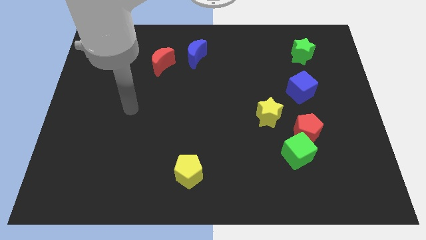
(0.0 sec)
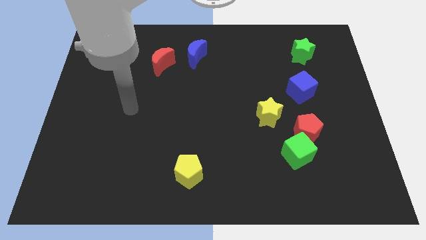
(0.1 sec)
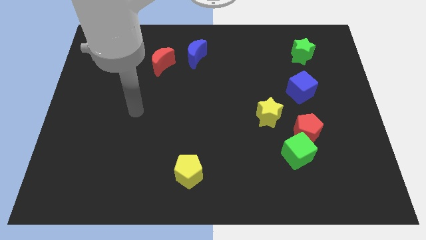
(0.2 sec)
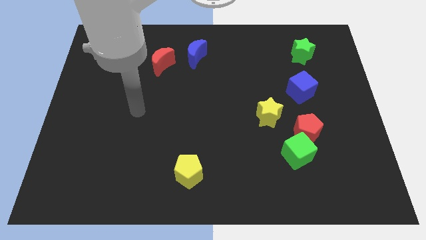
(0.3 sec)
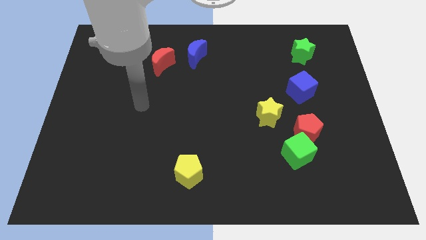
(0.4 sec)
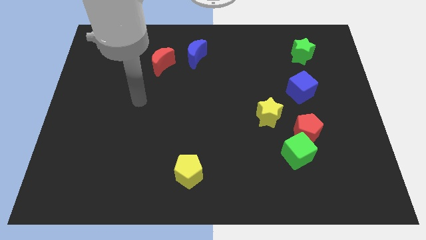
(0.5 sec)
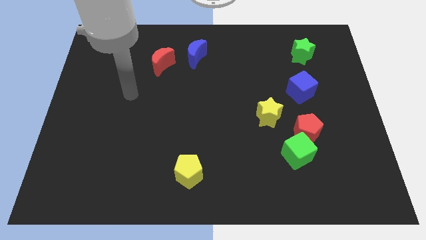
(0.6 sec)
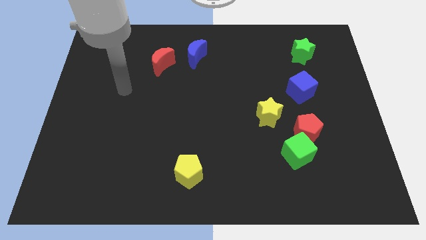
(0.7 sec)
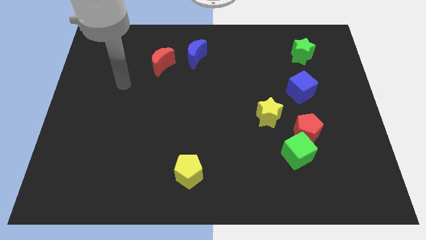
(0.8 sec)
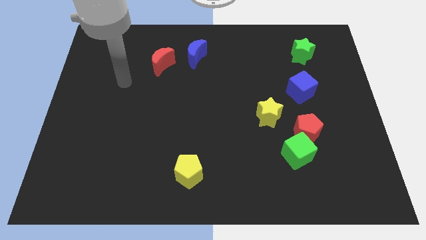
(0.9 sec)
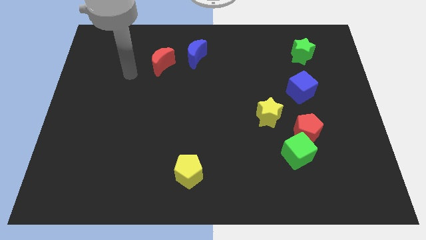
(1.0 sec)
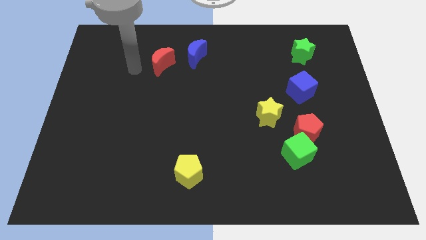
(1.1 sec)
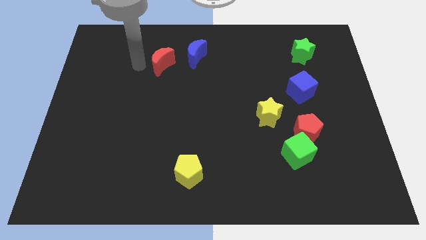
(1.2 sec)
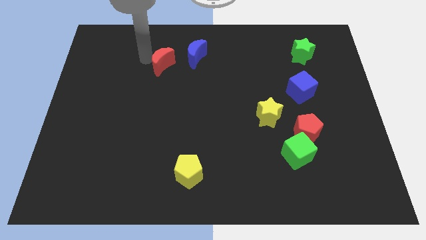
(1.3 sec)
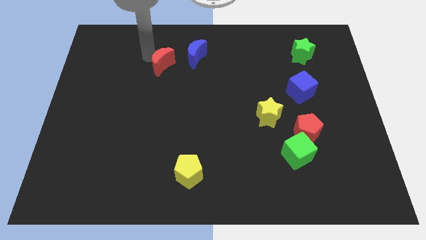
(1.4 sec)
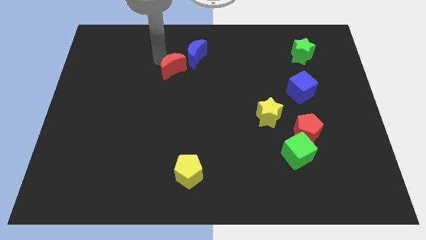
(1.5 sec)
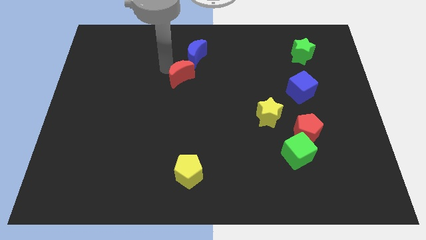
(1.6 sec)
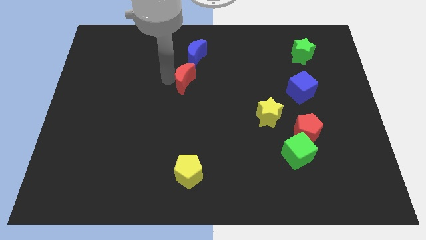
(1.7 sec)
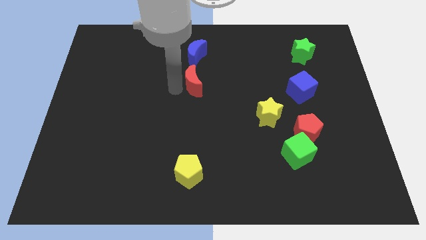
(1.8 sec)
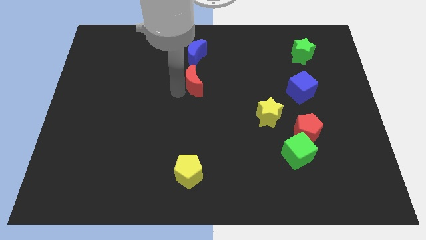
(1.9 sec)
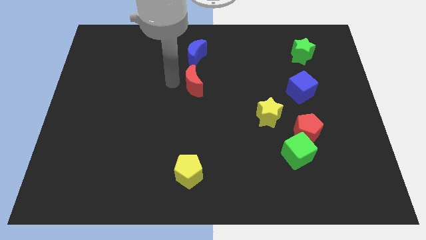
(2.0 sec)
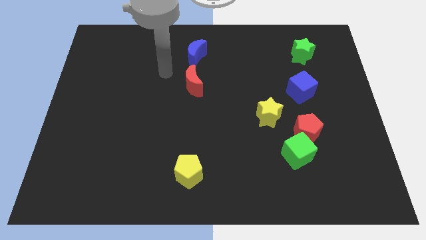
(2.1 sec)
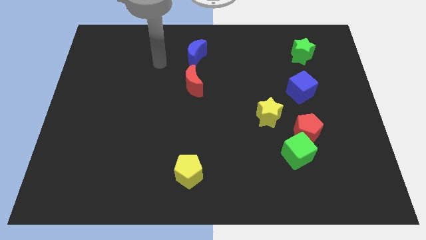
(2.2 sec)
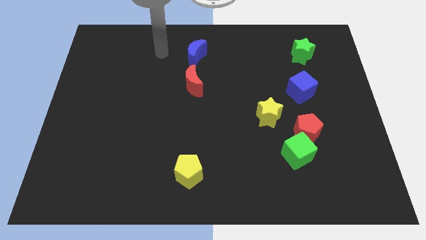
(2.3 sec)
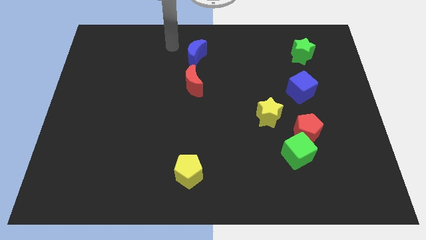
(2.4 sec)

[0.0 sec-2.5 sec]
place red moon below blue moon

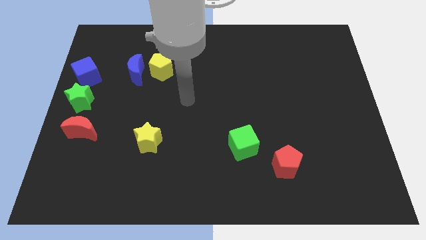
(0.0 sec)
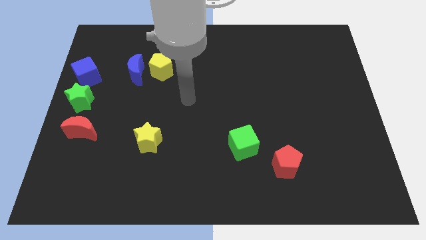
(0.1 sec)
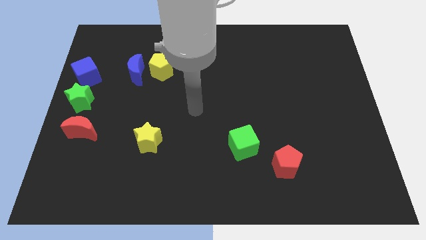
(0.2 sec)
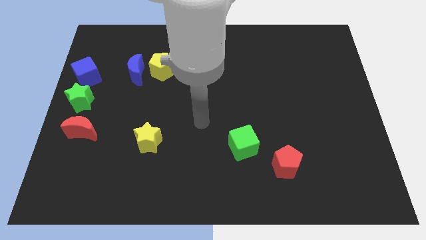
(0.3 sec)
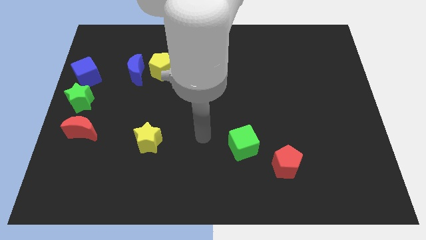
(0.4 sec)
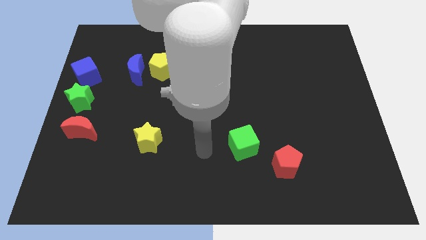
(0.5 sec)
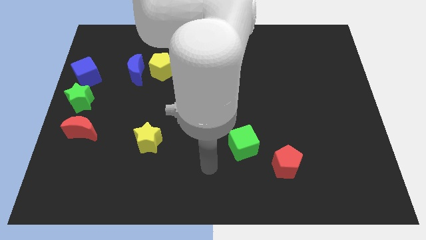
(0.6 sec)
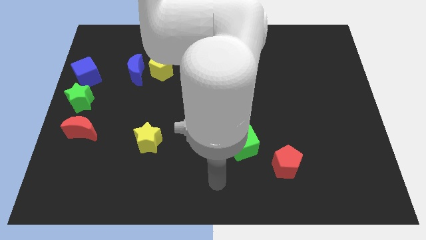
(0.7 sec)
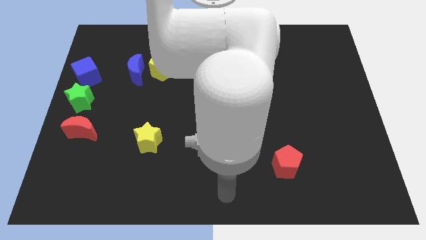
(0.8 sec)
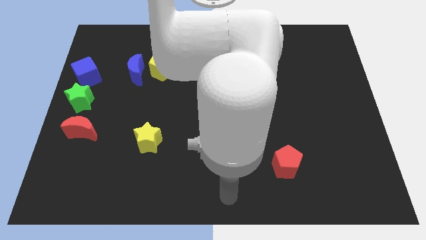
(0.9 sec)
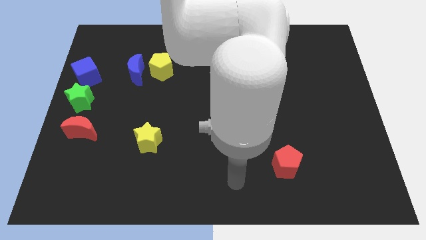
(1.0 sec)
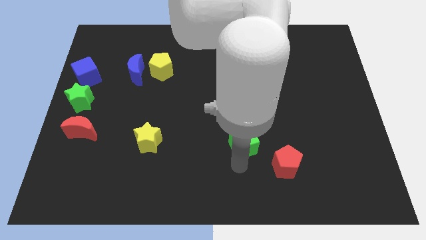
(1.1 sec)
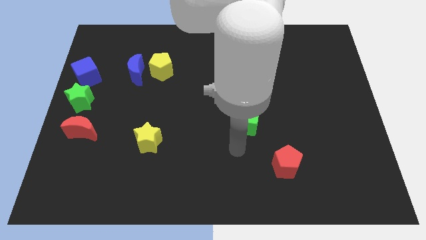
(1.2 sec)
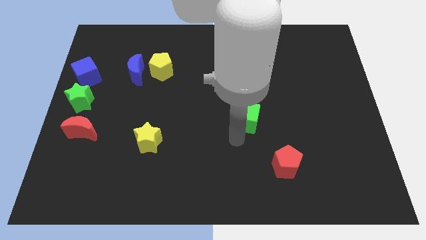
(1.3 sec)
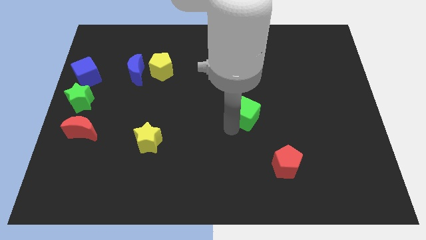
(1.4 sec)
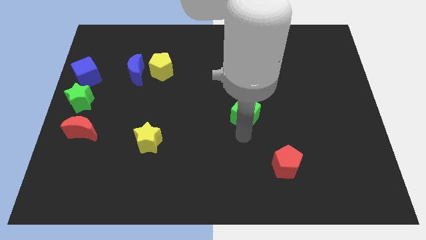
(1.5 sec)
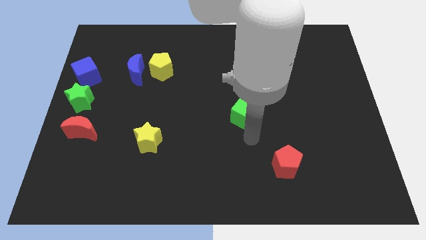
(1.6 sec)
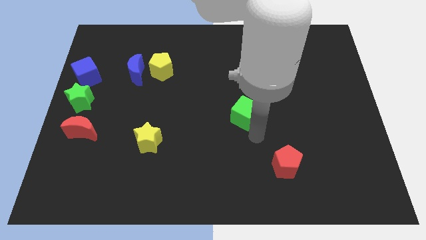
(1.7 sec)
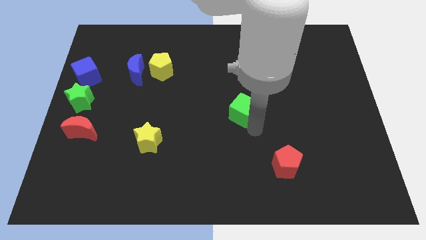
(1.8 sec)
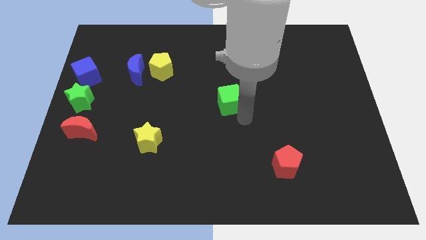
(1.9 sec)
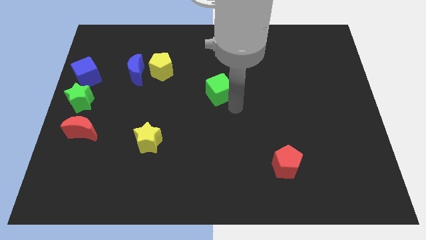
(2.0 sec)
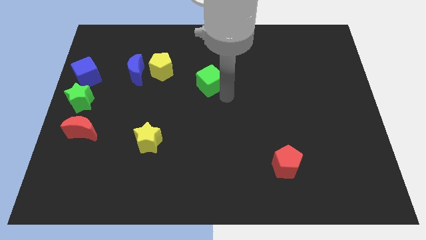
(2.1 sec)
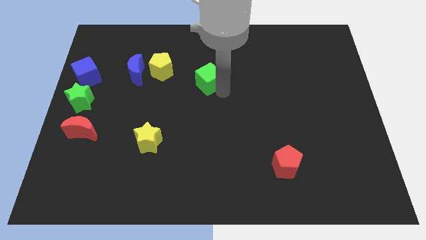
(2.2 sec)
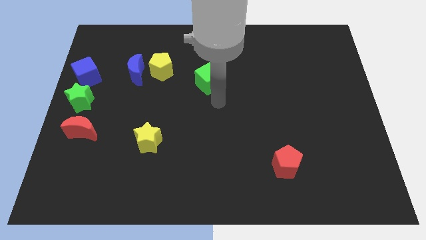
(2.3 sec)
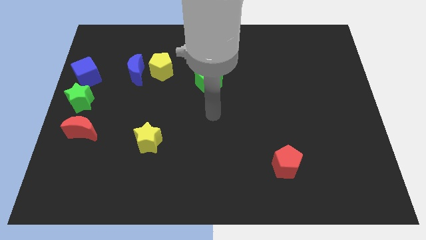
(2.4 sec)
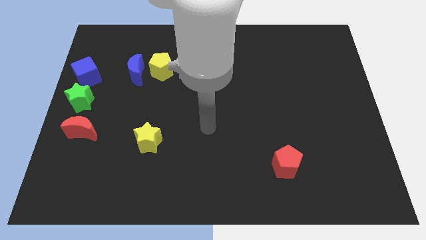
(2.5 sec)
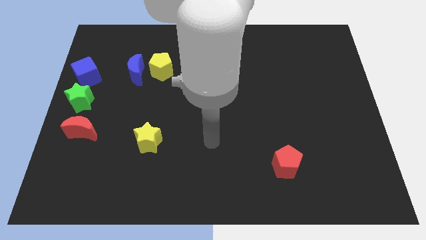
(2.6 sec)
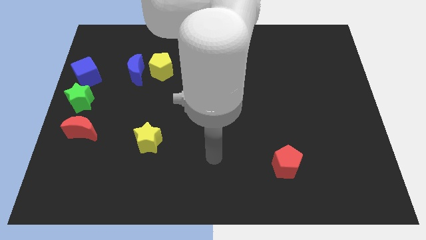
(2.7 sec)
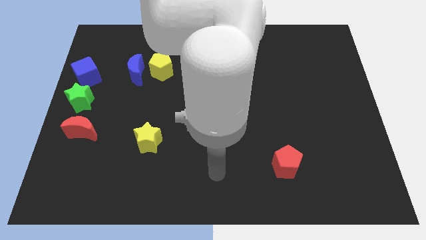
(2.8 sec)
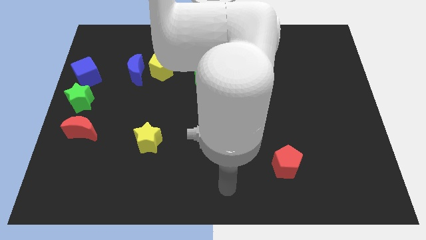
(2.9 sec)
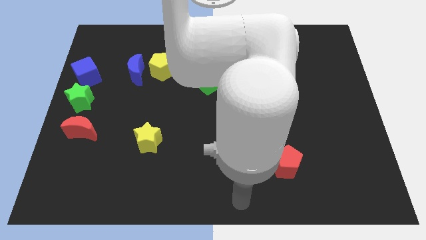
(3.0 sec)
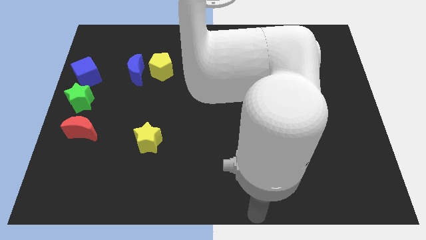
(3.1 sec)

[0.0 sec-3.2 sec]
move the green cube towards top center

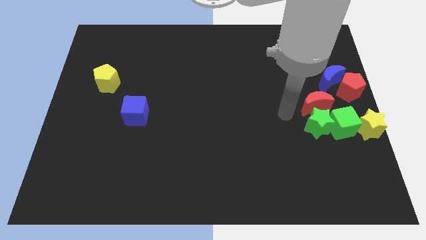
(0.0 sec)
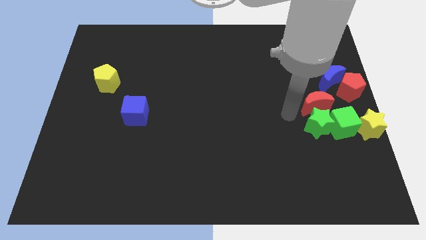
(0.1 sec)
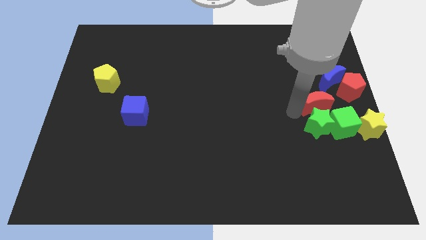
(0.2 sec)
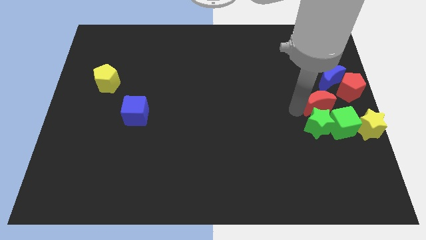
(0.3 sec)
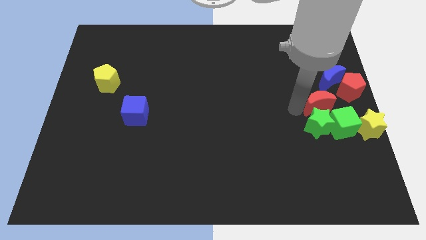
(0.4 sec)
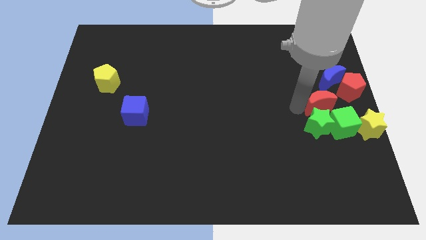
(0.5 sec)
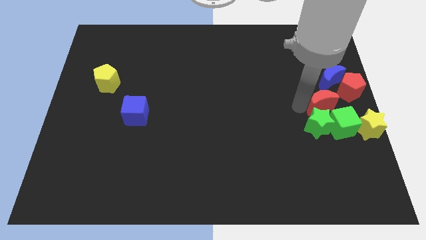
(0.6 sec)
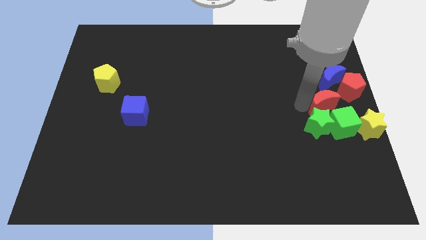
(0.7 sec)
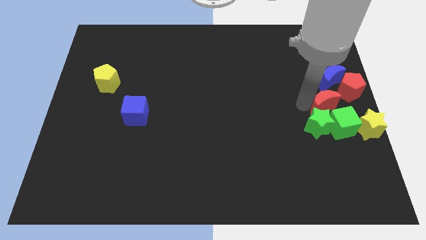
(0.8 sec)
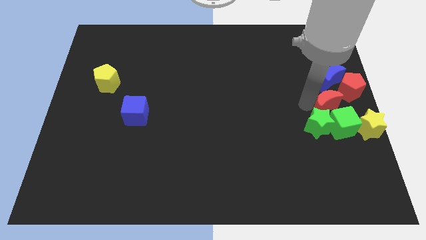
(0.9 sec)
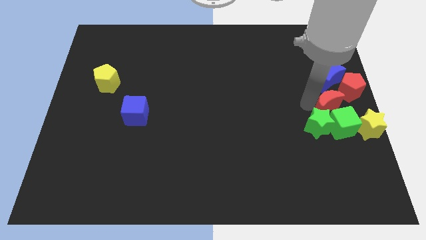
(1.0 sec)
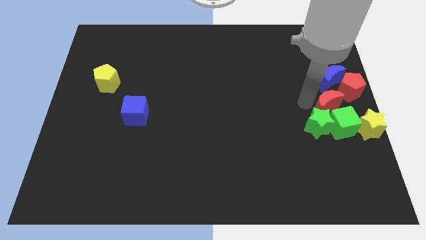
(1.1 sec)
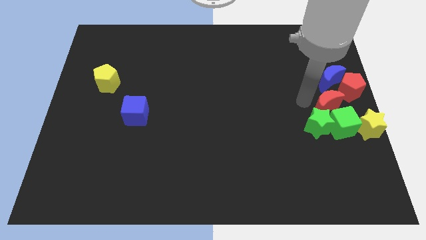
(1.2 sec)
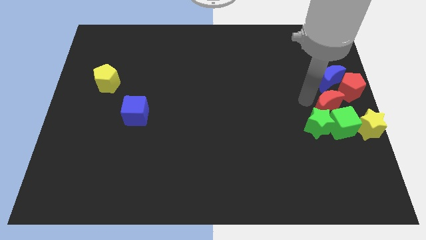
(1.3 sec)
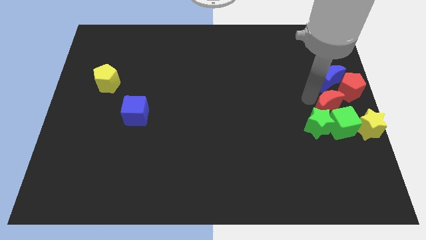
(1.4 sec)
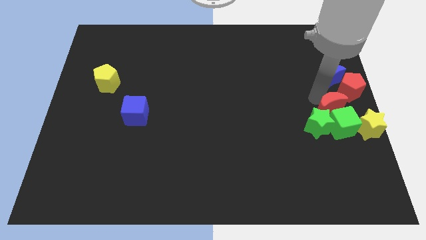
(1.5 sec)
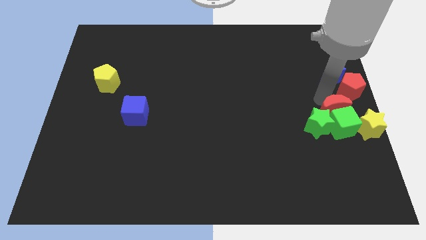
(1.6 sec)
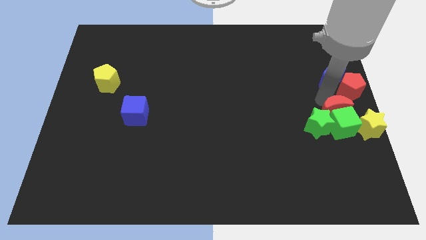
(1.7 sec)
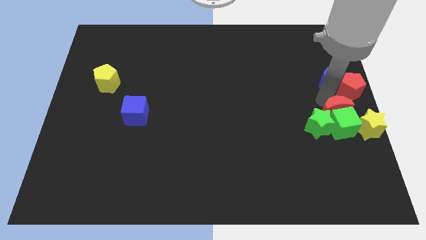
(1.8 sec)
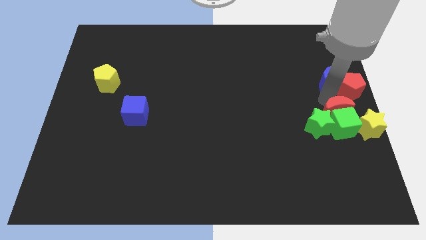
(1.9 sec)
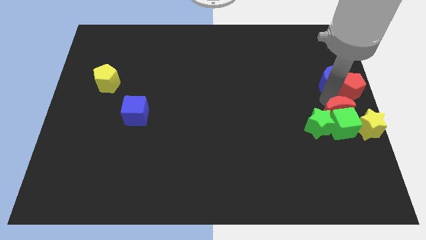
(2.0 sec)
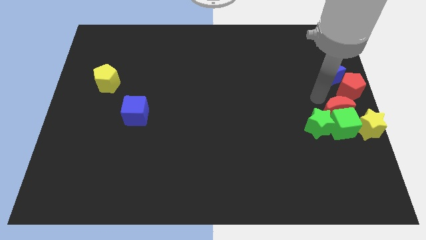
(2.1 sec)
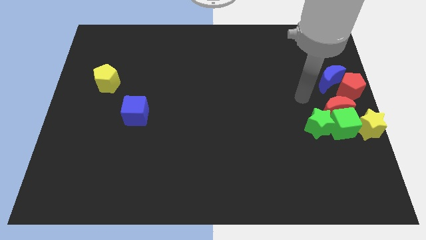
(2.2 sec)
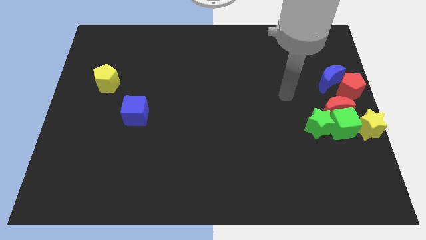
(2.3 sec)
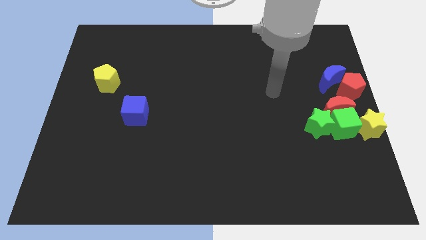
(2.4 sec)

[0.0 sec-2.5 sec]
push the red moon into green cube

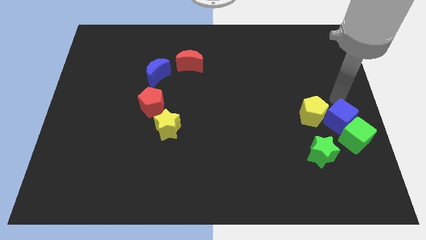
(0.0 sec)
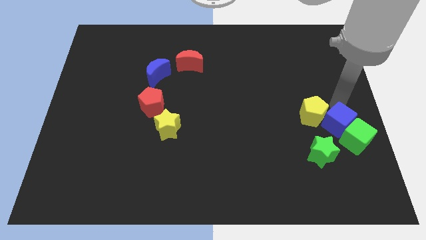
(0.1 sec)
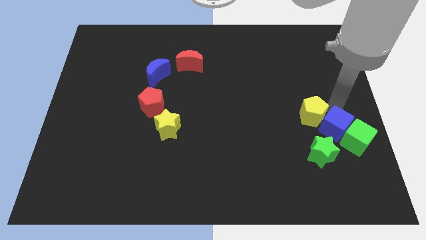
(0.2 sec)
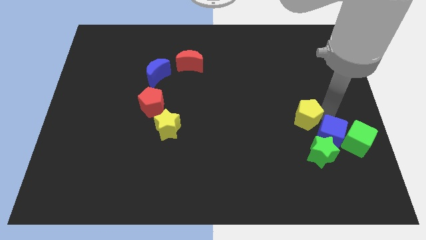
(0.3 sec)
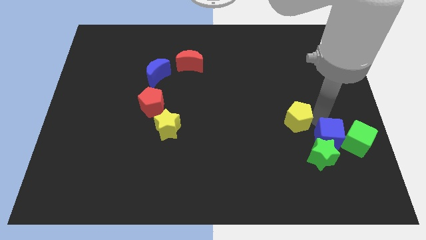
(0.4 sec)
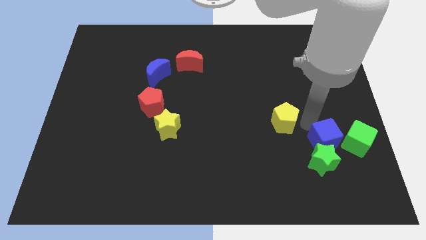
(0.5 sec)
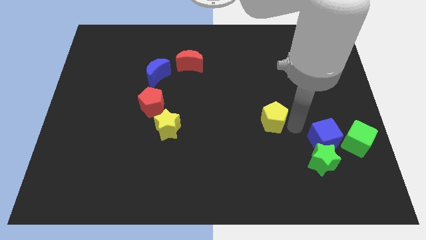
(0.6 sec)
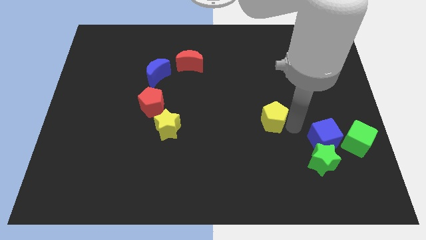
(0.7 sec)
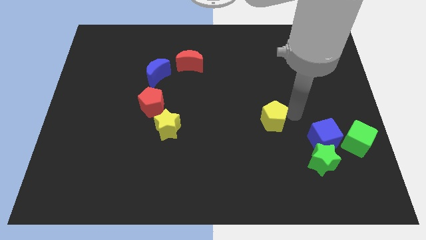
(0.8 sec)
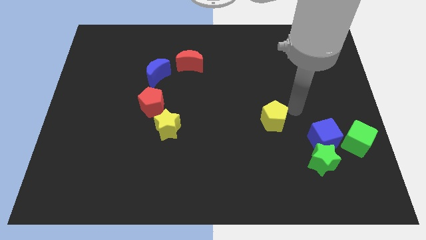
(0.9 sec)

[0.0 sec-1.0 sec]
separate the yellow pentagon from the blue cube
